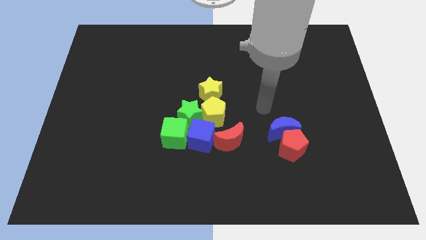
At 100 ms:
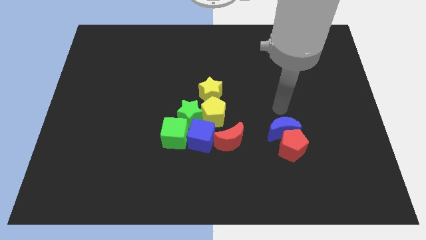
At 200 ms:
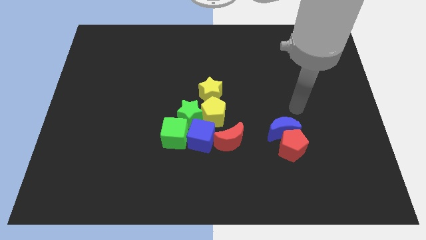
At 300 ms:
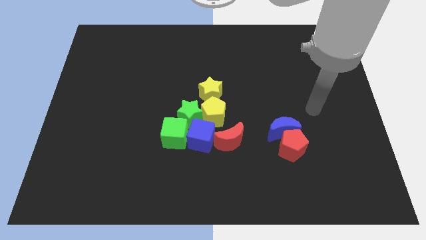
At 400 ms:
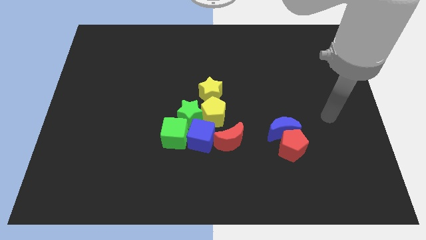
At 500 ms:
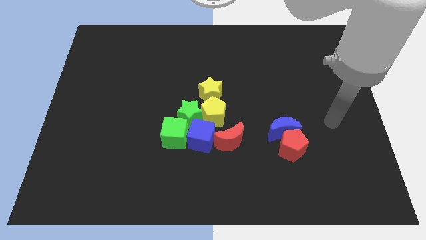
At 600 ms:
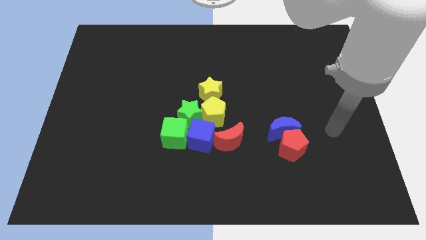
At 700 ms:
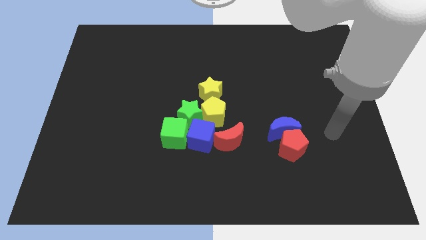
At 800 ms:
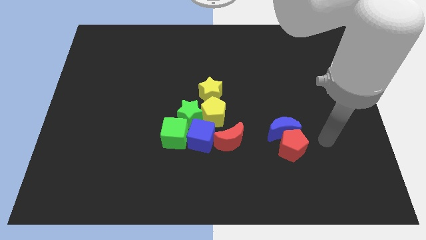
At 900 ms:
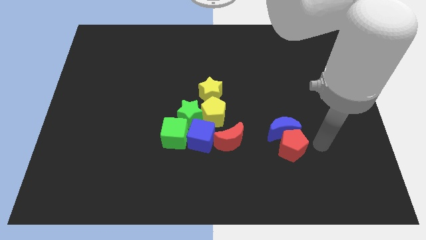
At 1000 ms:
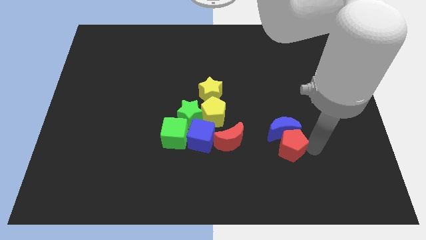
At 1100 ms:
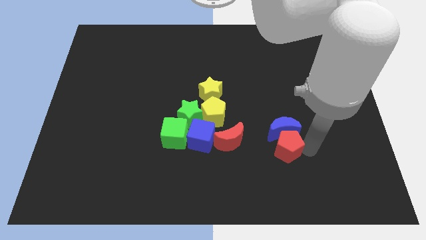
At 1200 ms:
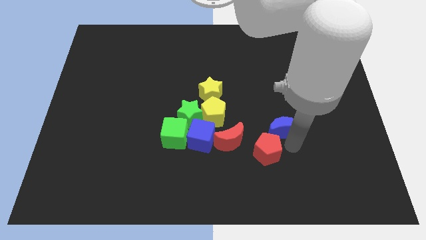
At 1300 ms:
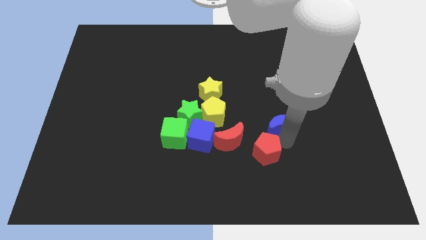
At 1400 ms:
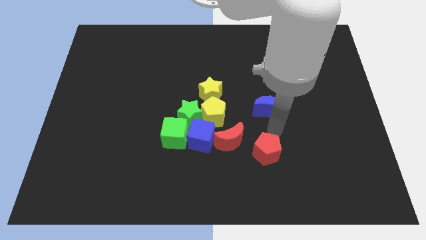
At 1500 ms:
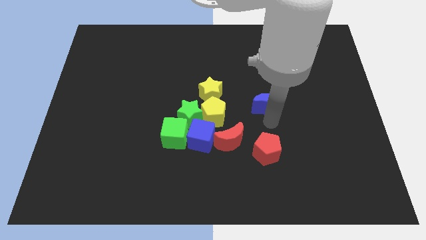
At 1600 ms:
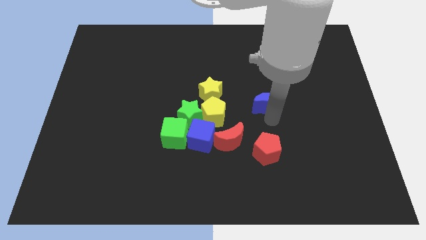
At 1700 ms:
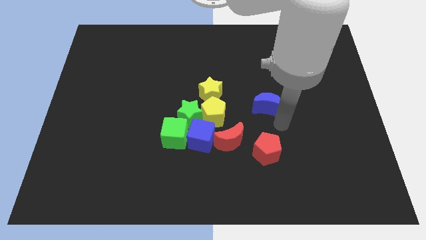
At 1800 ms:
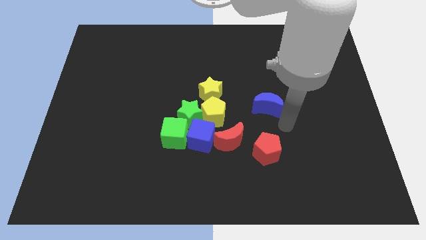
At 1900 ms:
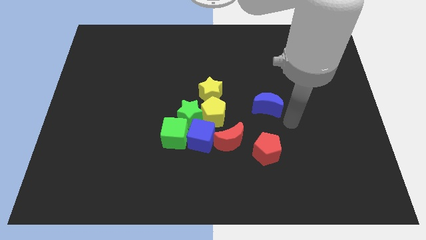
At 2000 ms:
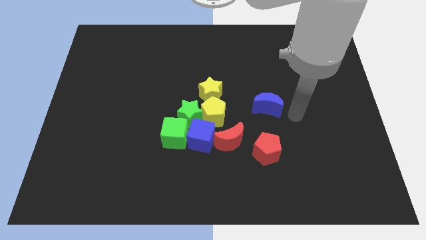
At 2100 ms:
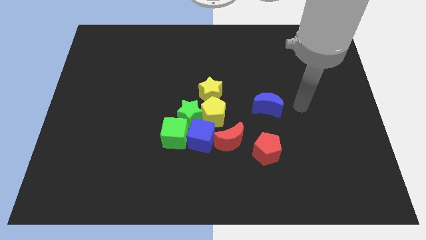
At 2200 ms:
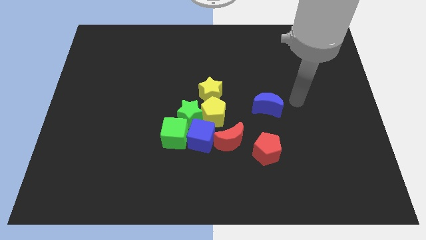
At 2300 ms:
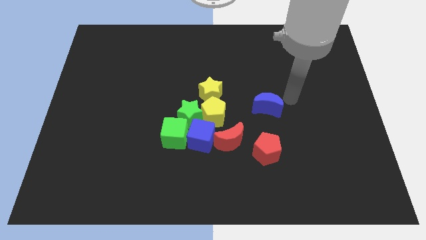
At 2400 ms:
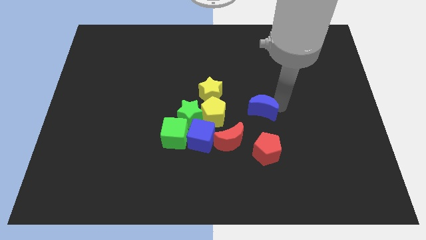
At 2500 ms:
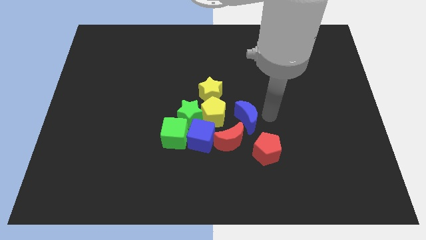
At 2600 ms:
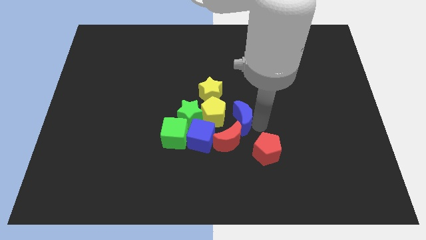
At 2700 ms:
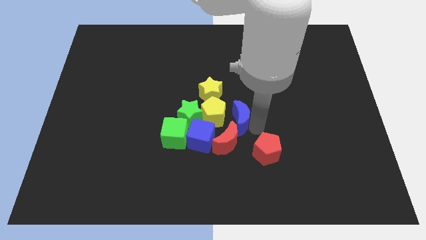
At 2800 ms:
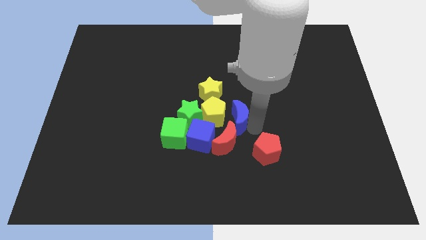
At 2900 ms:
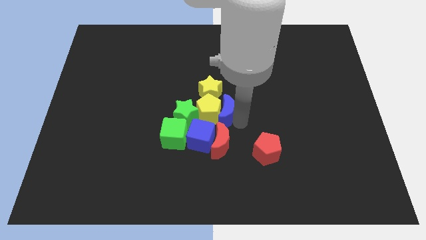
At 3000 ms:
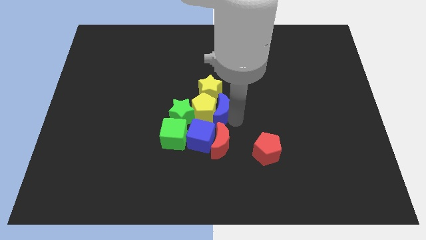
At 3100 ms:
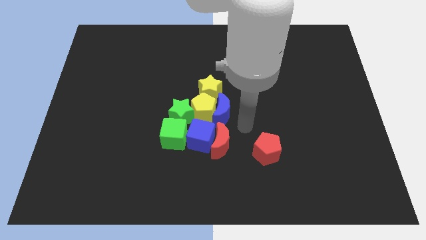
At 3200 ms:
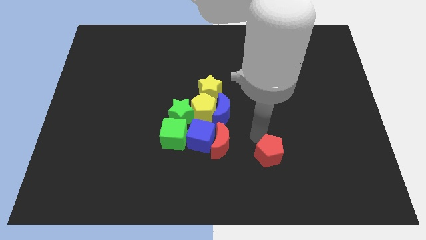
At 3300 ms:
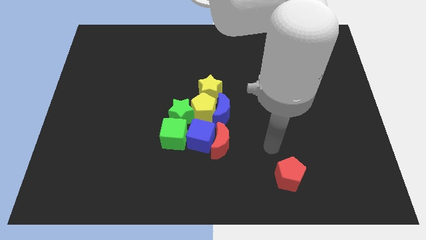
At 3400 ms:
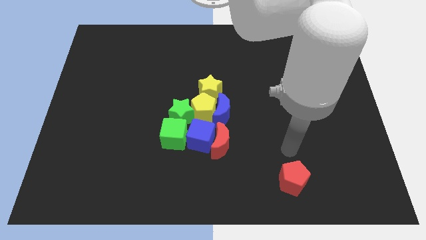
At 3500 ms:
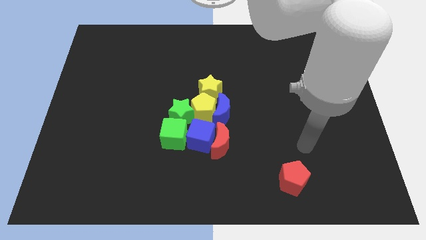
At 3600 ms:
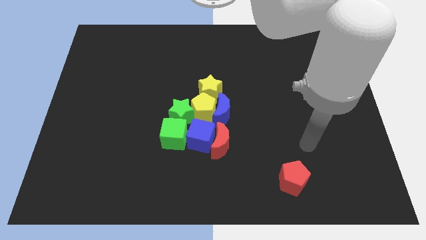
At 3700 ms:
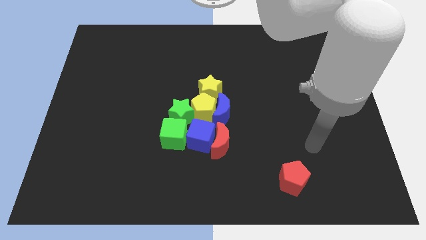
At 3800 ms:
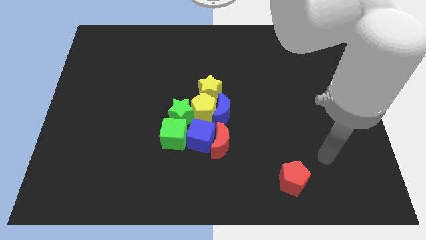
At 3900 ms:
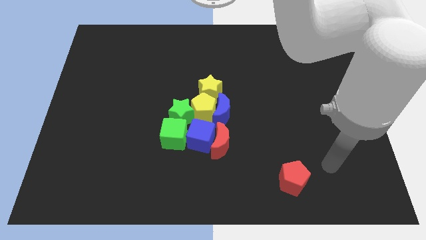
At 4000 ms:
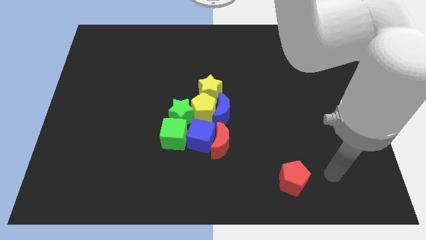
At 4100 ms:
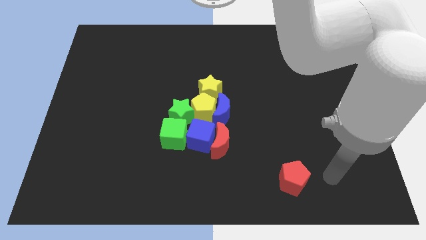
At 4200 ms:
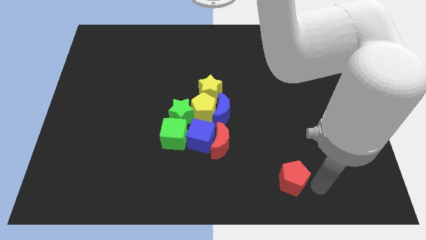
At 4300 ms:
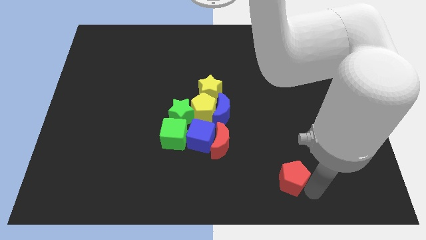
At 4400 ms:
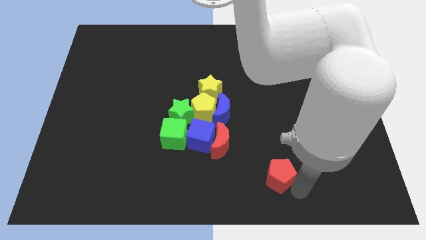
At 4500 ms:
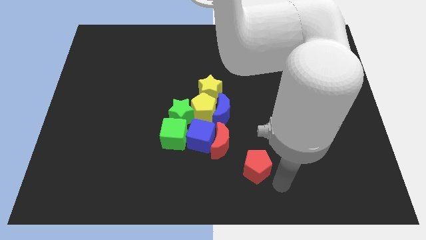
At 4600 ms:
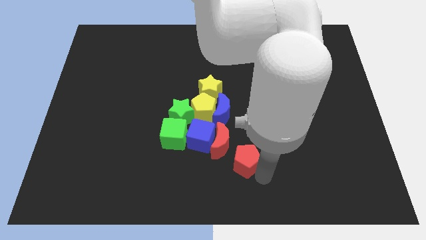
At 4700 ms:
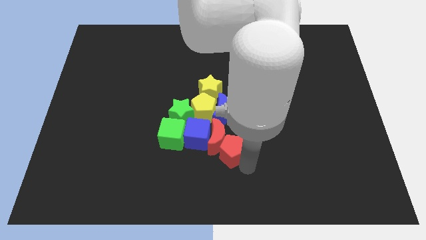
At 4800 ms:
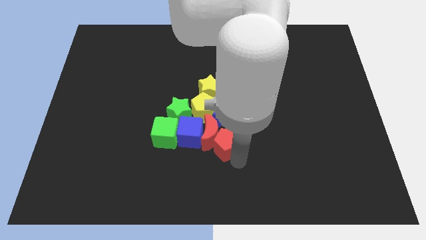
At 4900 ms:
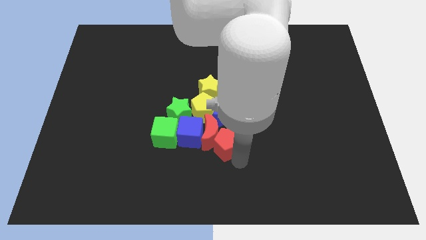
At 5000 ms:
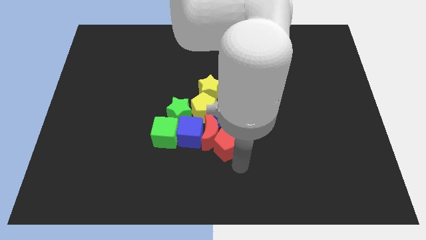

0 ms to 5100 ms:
slide red blocks and blue moon into group of blocks

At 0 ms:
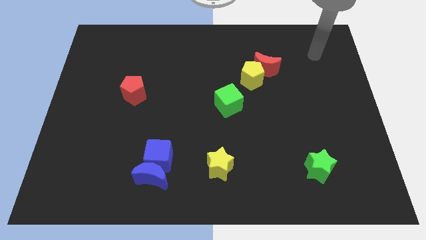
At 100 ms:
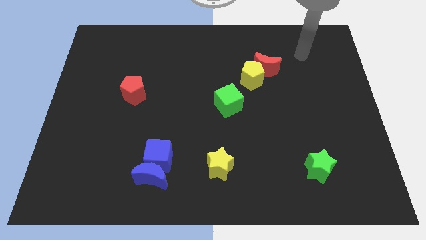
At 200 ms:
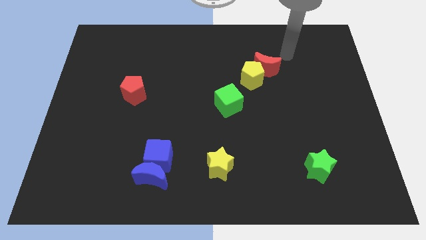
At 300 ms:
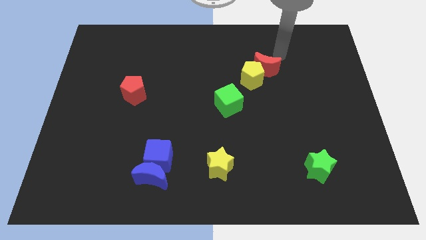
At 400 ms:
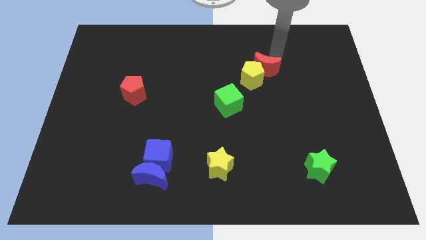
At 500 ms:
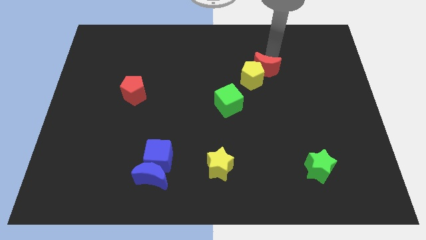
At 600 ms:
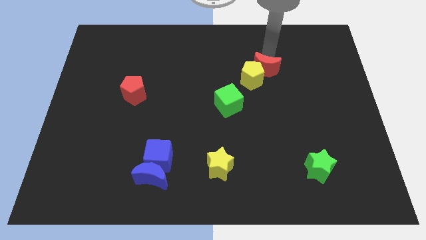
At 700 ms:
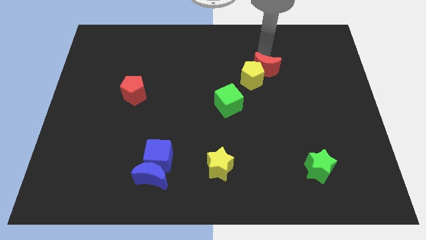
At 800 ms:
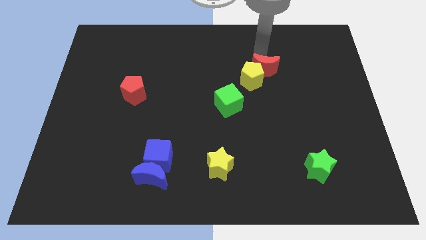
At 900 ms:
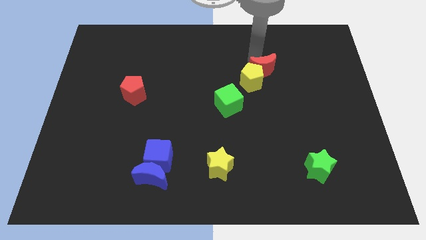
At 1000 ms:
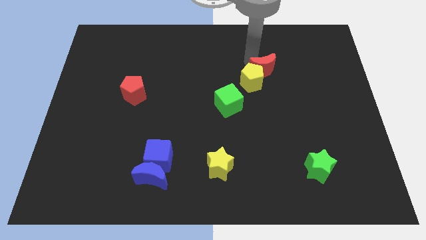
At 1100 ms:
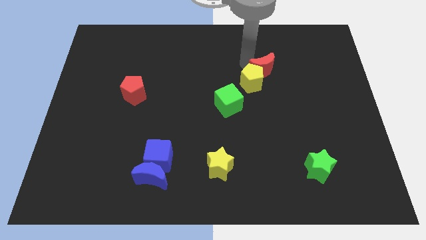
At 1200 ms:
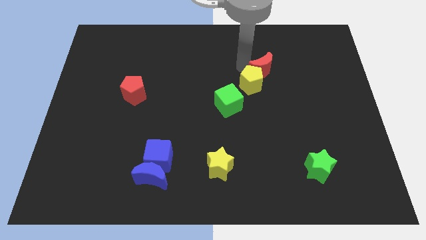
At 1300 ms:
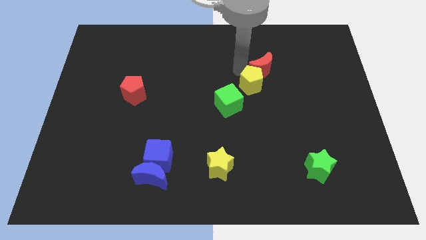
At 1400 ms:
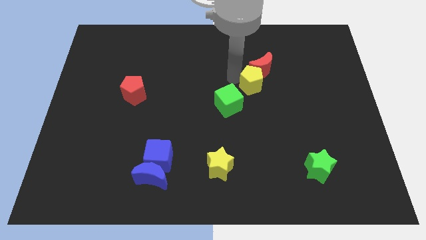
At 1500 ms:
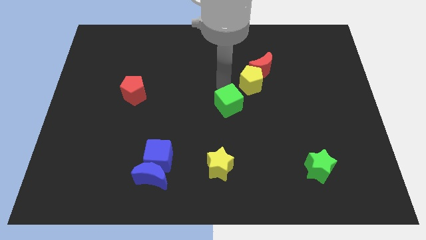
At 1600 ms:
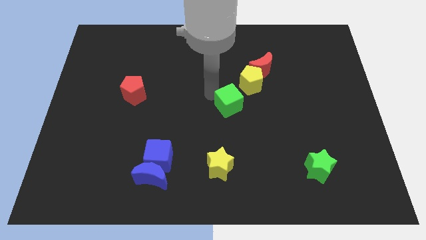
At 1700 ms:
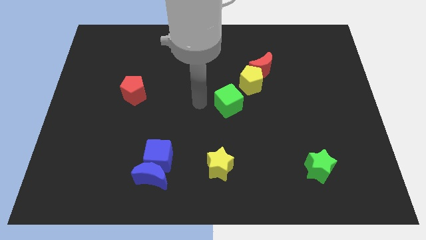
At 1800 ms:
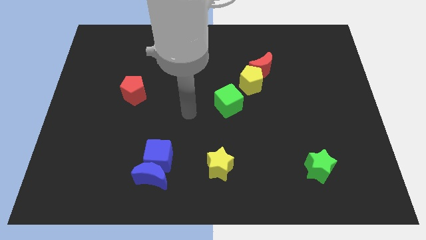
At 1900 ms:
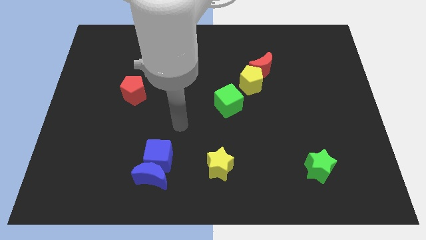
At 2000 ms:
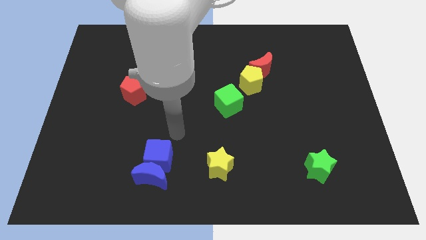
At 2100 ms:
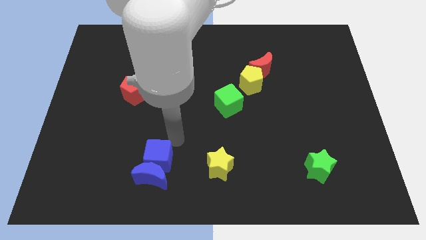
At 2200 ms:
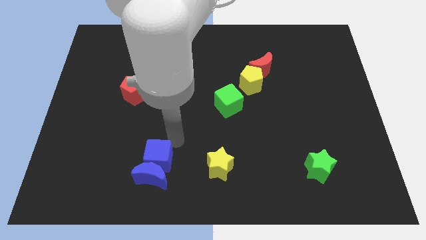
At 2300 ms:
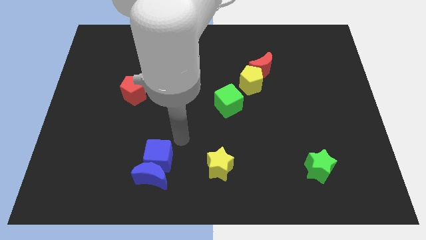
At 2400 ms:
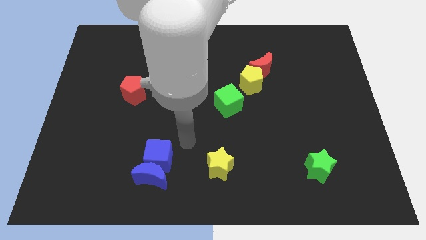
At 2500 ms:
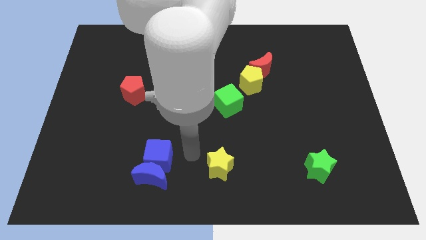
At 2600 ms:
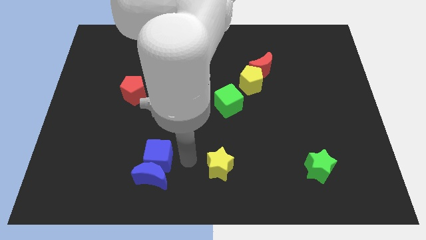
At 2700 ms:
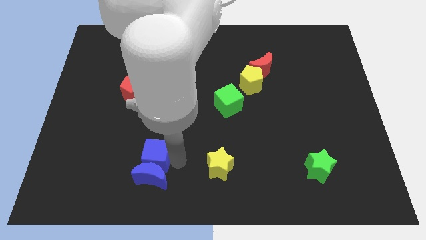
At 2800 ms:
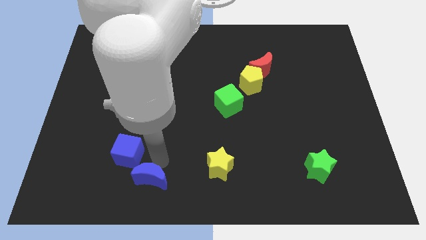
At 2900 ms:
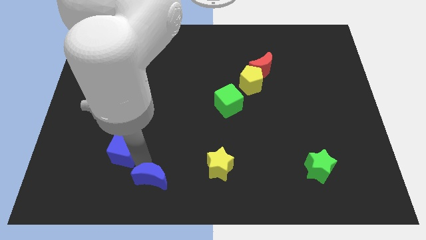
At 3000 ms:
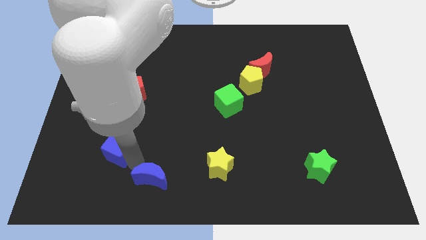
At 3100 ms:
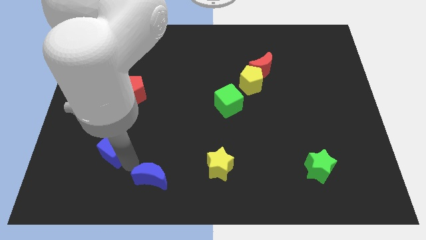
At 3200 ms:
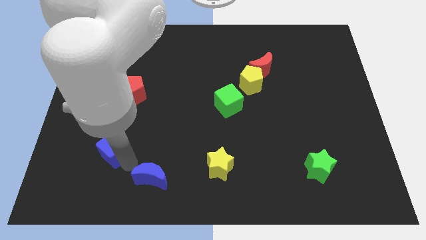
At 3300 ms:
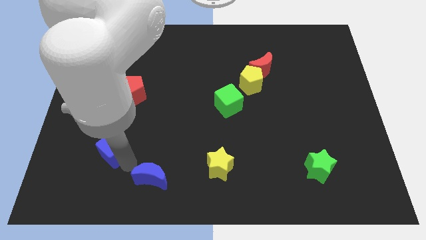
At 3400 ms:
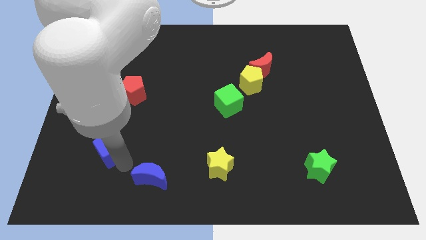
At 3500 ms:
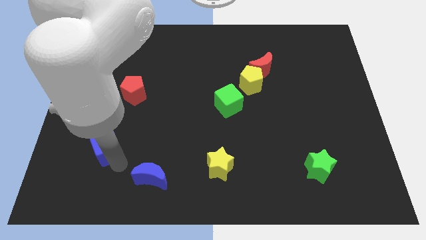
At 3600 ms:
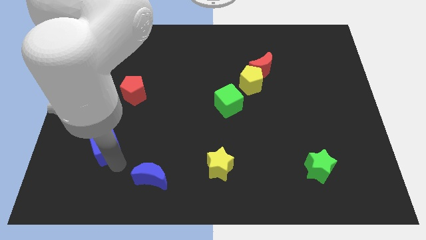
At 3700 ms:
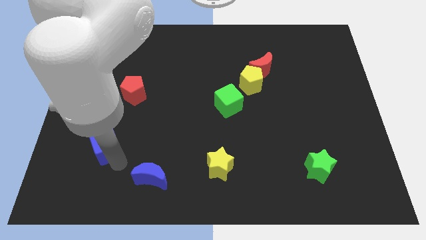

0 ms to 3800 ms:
go and separate the blue cube from the blue crescent

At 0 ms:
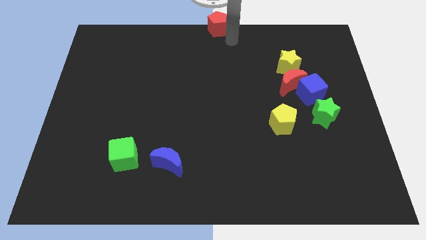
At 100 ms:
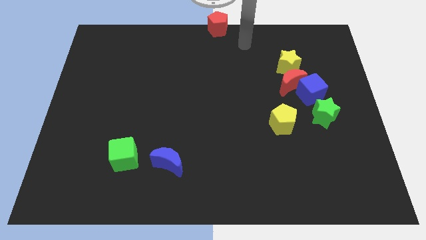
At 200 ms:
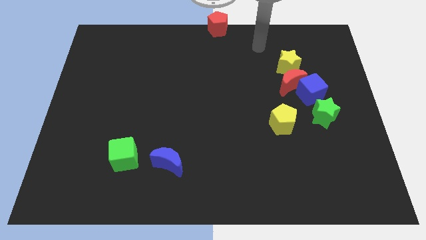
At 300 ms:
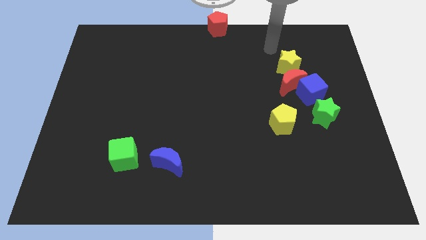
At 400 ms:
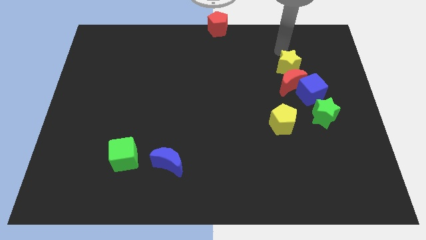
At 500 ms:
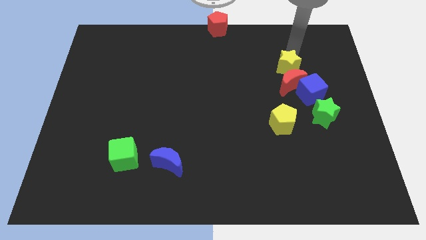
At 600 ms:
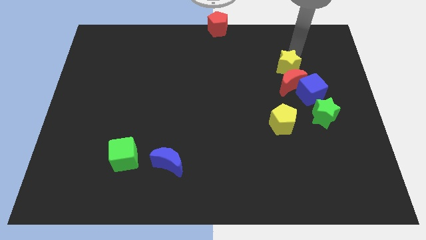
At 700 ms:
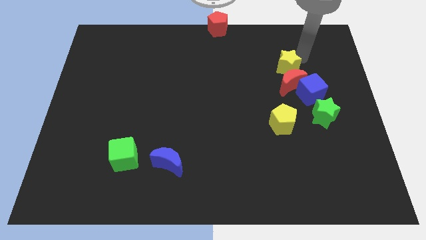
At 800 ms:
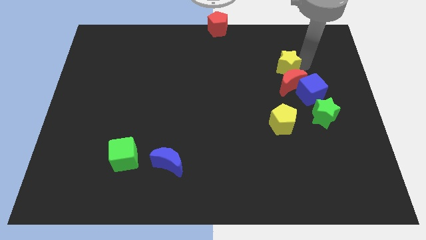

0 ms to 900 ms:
move arm close to yellow star
